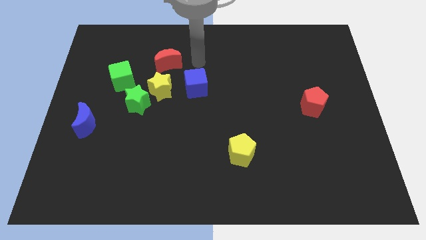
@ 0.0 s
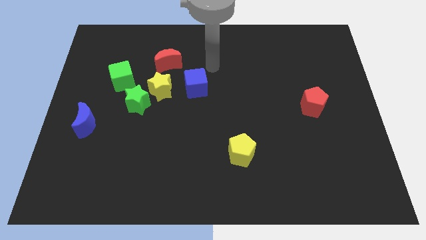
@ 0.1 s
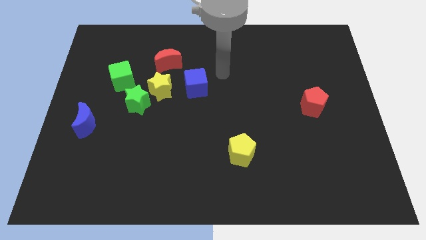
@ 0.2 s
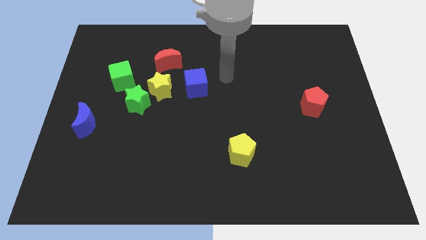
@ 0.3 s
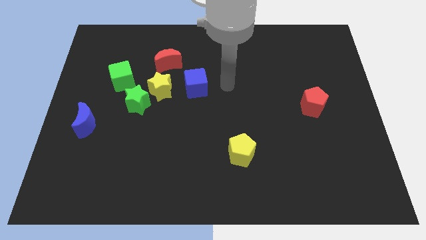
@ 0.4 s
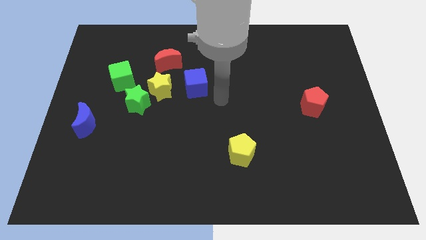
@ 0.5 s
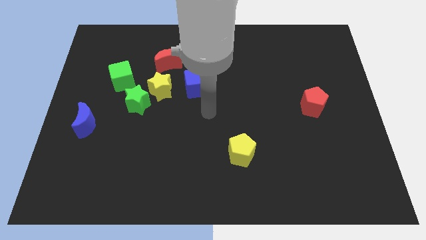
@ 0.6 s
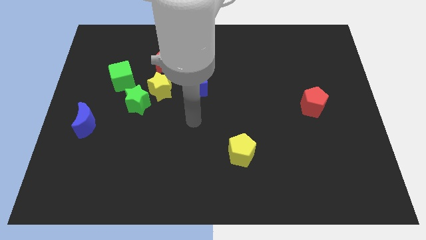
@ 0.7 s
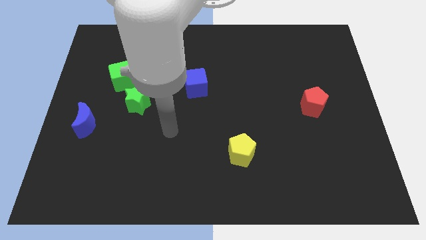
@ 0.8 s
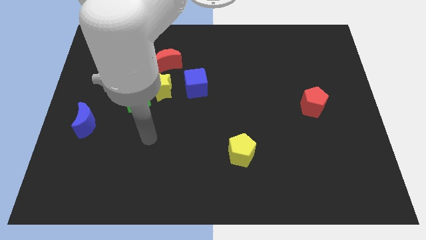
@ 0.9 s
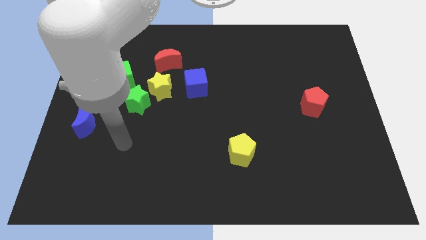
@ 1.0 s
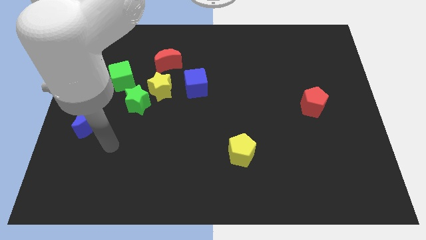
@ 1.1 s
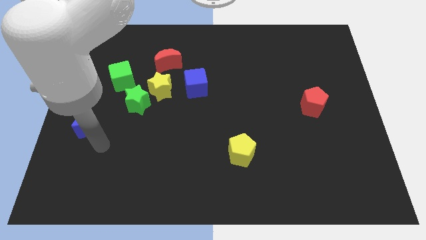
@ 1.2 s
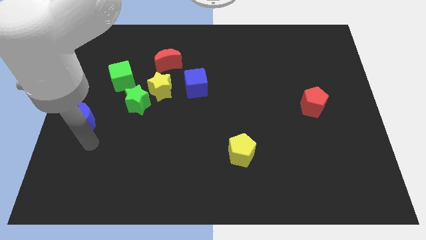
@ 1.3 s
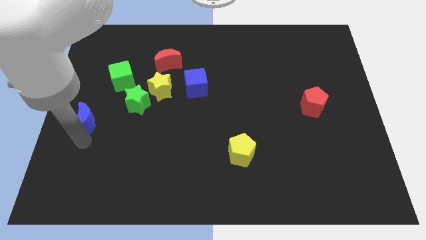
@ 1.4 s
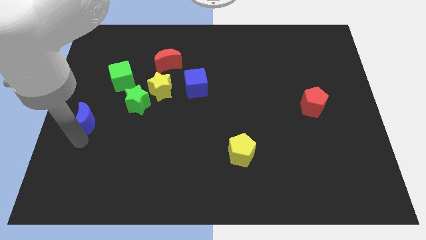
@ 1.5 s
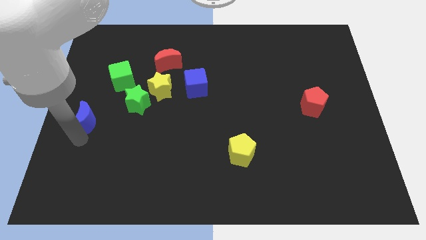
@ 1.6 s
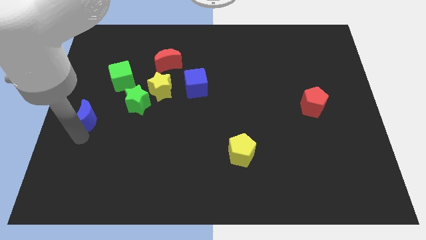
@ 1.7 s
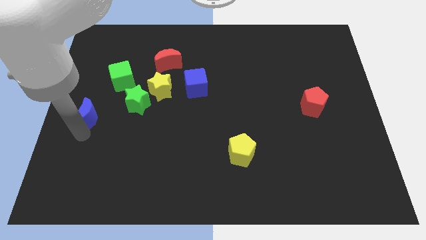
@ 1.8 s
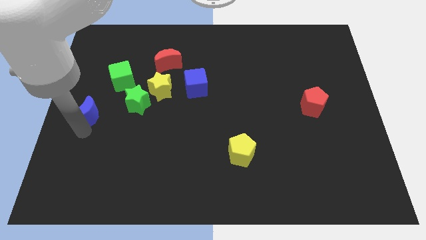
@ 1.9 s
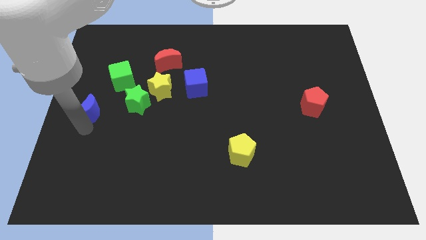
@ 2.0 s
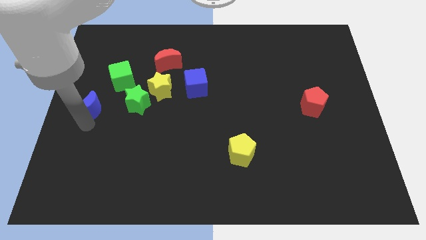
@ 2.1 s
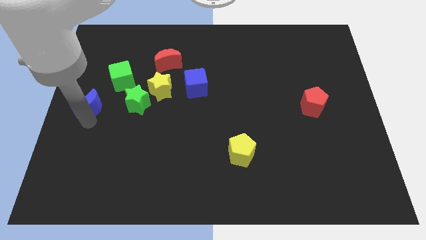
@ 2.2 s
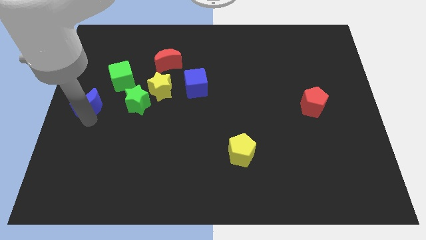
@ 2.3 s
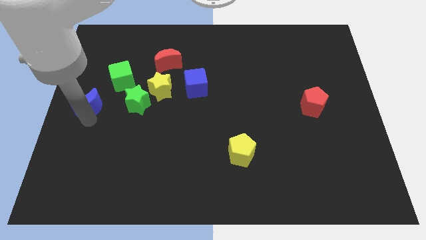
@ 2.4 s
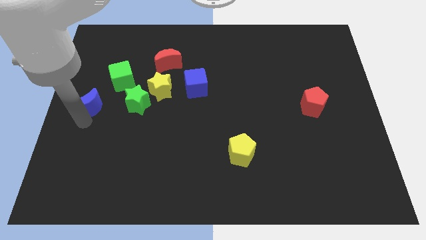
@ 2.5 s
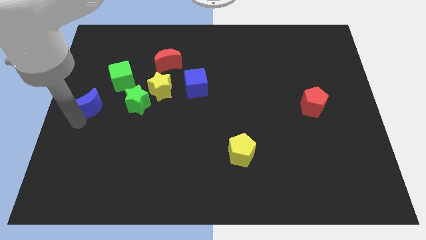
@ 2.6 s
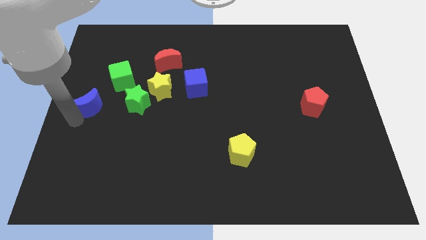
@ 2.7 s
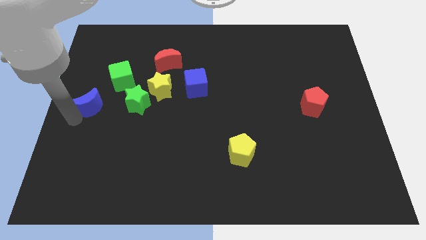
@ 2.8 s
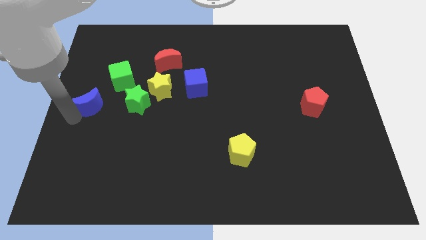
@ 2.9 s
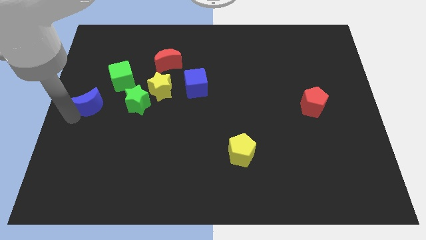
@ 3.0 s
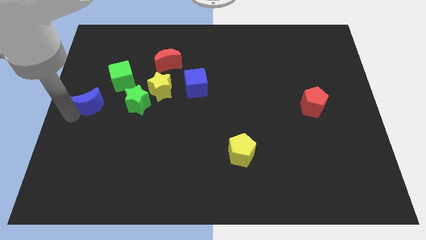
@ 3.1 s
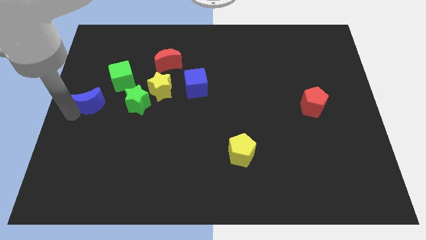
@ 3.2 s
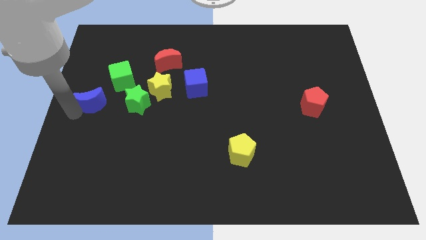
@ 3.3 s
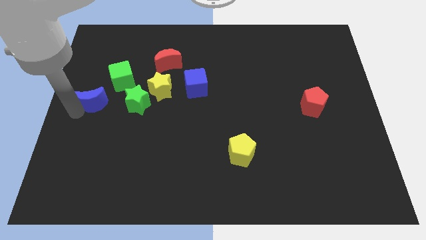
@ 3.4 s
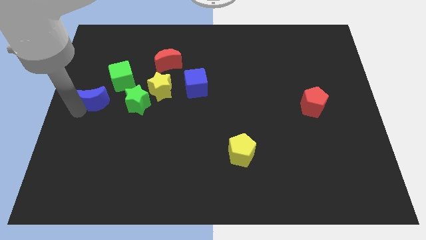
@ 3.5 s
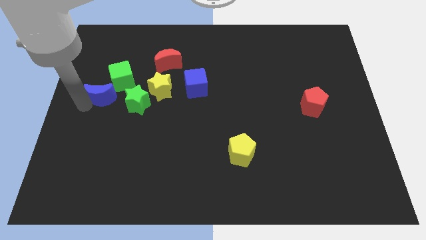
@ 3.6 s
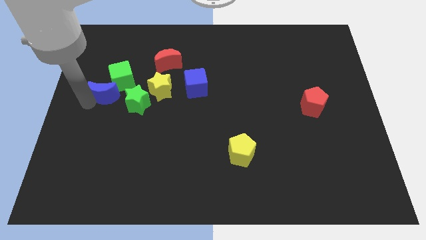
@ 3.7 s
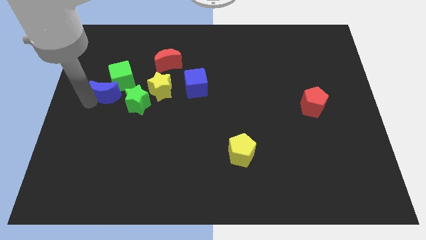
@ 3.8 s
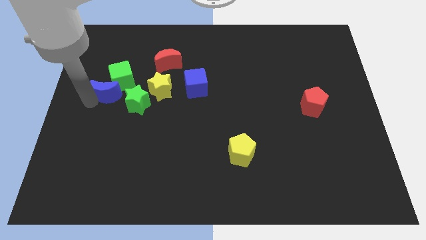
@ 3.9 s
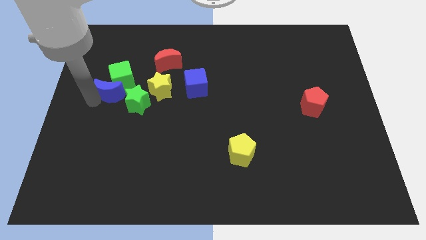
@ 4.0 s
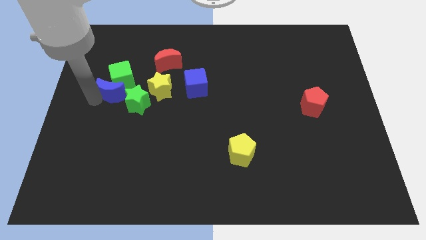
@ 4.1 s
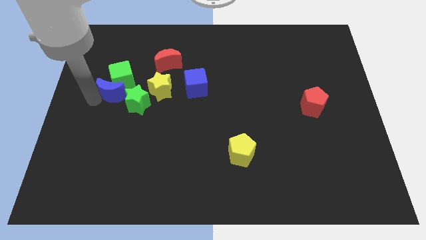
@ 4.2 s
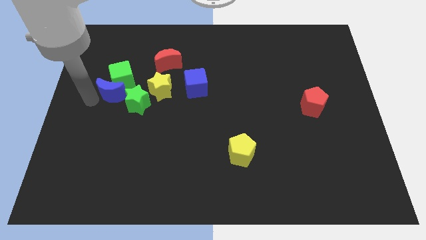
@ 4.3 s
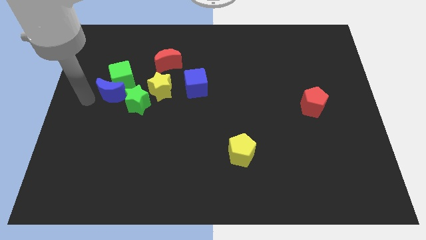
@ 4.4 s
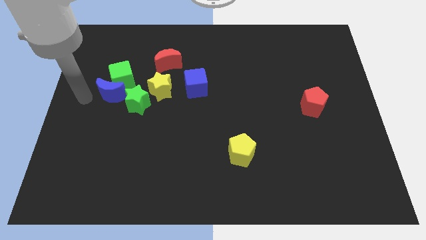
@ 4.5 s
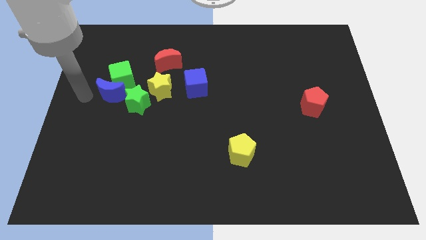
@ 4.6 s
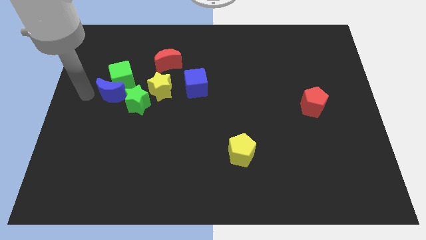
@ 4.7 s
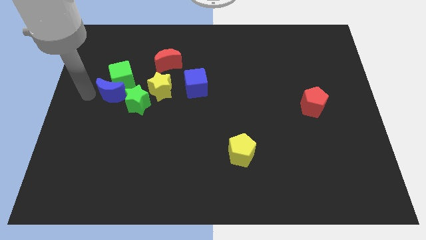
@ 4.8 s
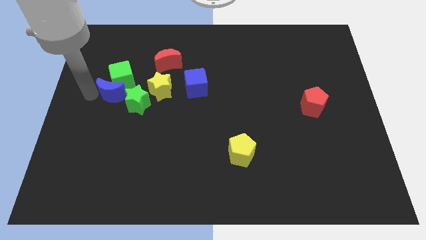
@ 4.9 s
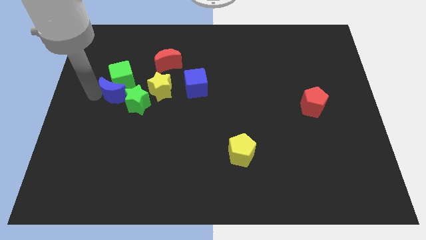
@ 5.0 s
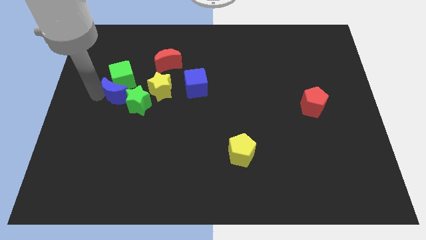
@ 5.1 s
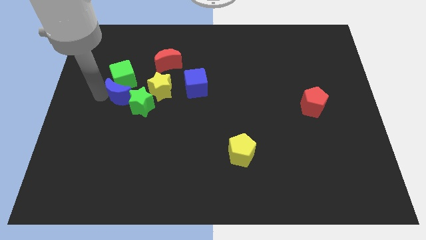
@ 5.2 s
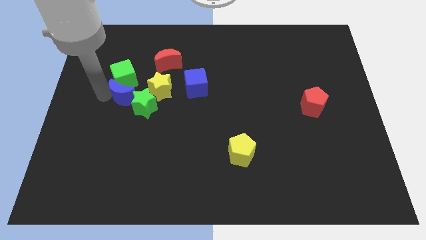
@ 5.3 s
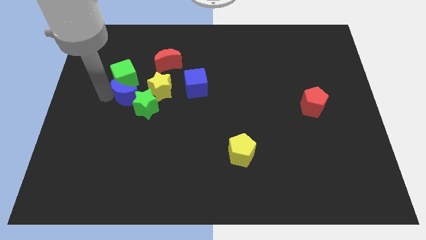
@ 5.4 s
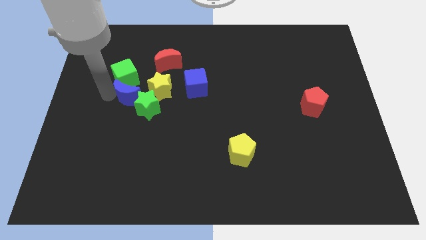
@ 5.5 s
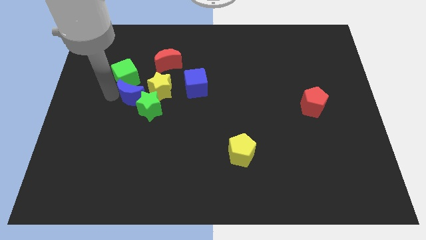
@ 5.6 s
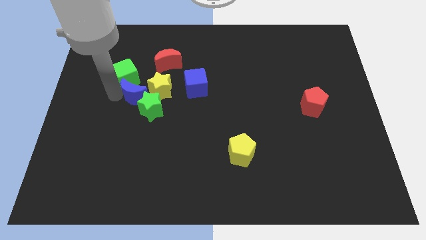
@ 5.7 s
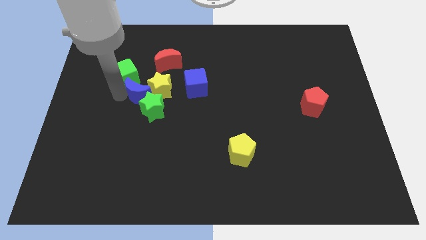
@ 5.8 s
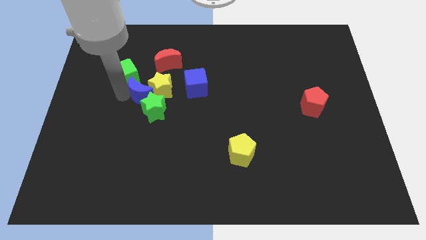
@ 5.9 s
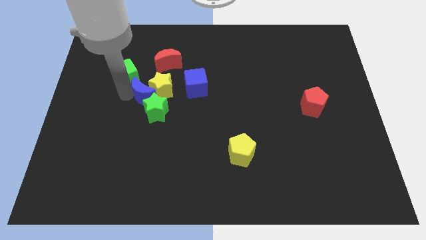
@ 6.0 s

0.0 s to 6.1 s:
slide the blue moon next to the yellow star

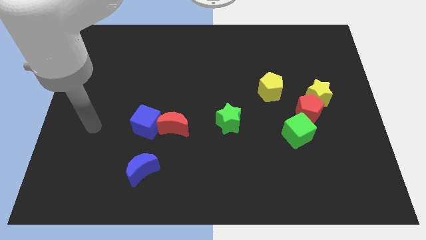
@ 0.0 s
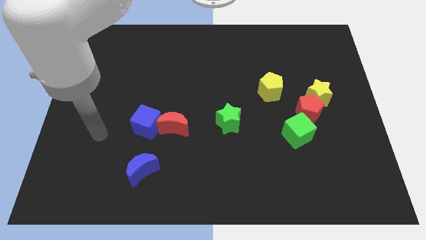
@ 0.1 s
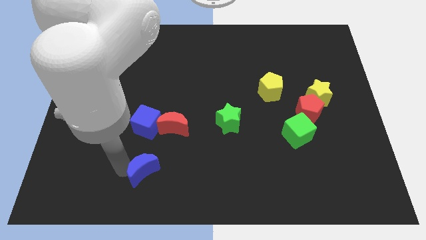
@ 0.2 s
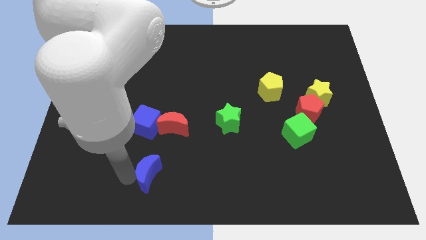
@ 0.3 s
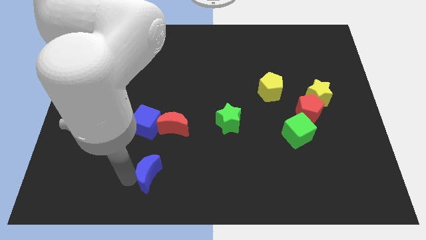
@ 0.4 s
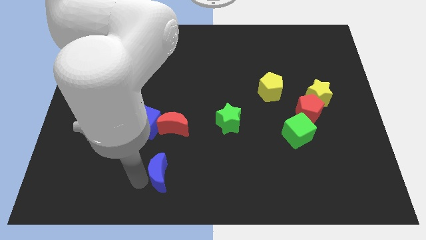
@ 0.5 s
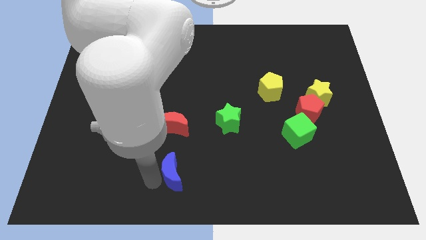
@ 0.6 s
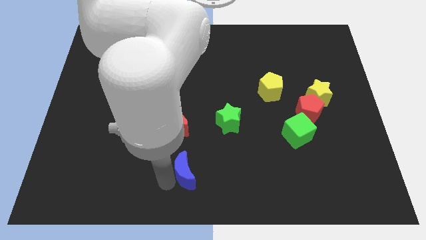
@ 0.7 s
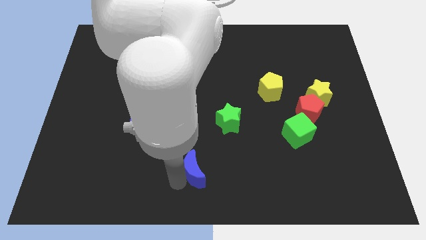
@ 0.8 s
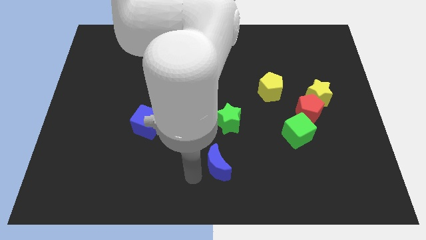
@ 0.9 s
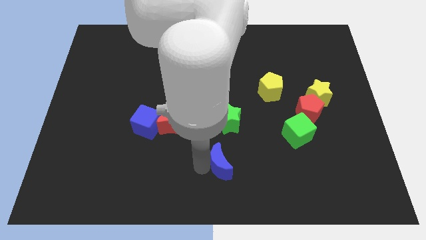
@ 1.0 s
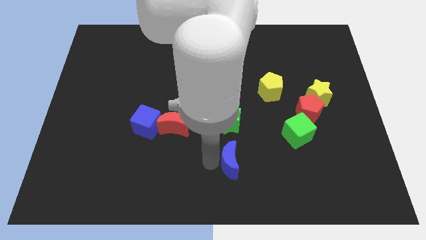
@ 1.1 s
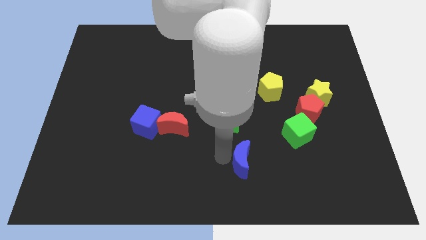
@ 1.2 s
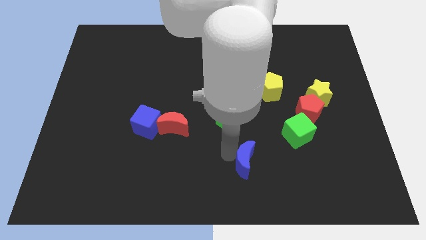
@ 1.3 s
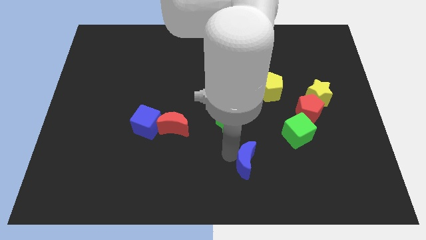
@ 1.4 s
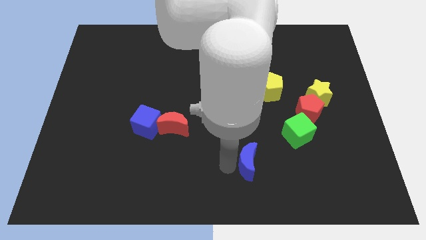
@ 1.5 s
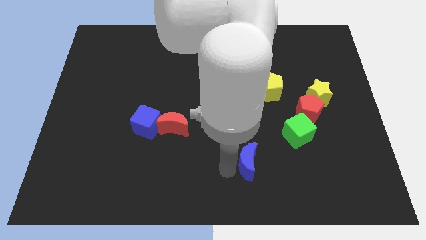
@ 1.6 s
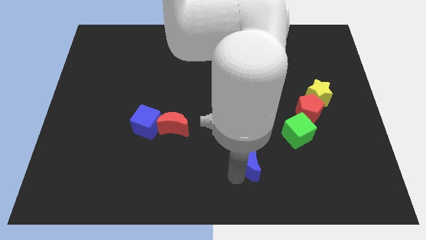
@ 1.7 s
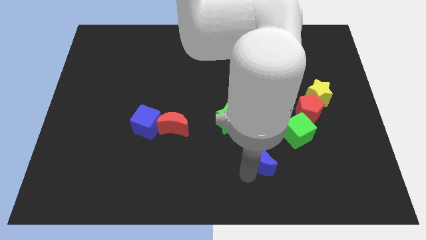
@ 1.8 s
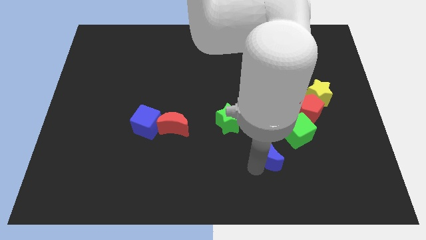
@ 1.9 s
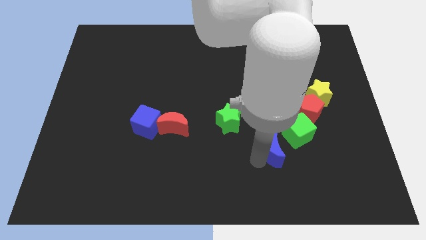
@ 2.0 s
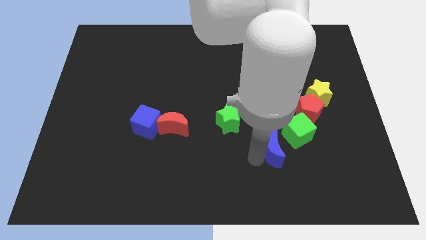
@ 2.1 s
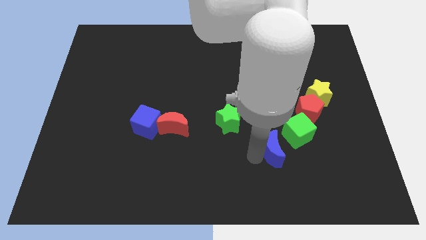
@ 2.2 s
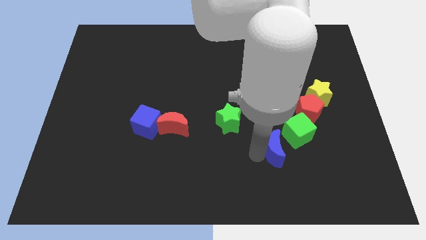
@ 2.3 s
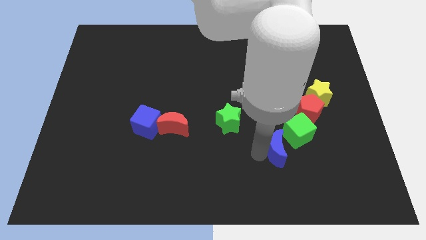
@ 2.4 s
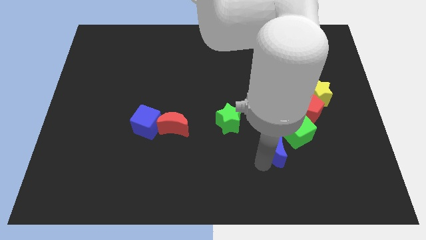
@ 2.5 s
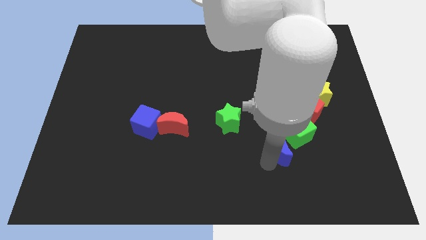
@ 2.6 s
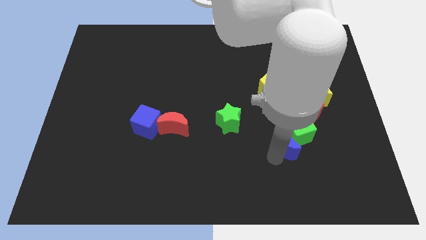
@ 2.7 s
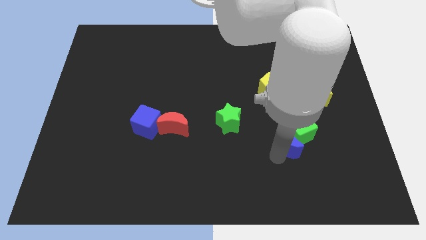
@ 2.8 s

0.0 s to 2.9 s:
push the blue moon next to the green cube
